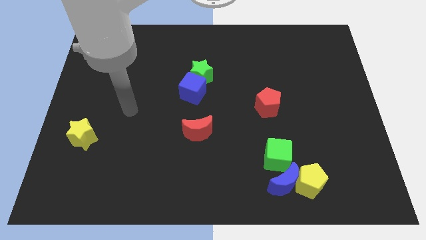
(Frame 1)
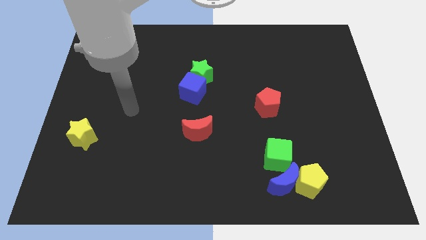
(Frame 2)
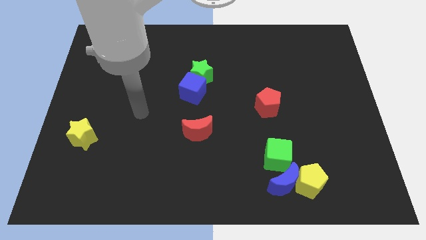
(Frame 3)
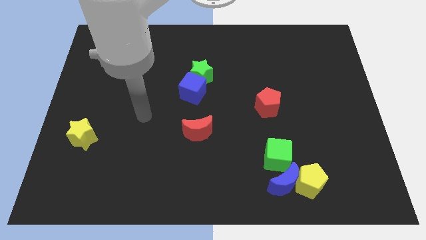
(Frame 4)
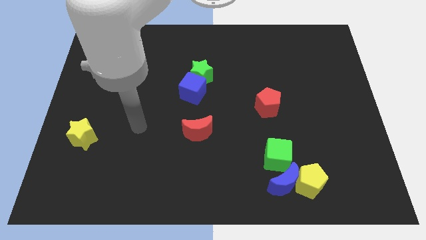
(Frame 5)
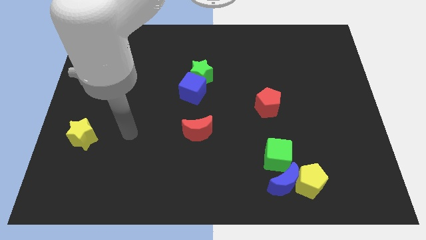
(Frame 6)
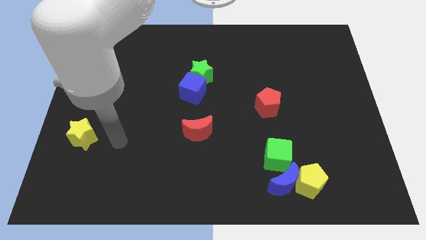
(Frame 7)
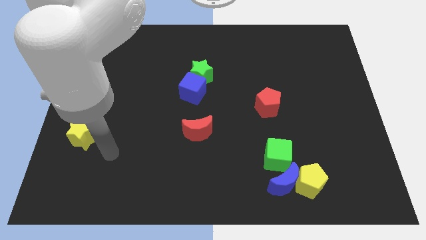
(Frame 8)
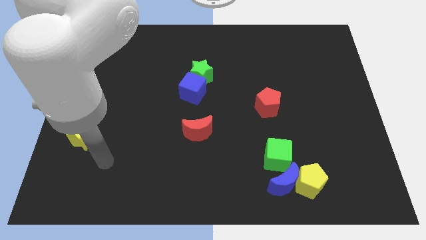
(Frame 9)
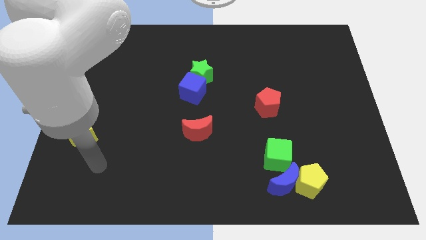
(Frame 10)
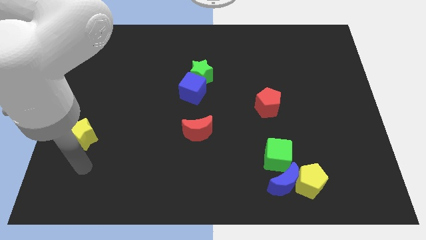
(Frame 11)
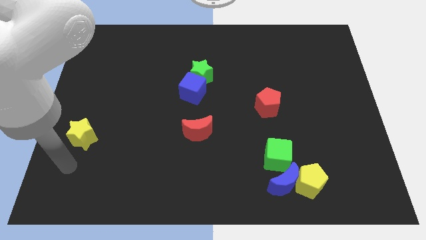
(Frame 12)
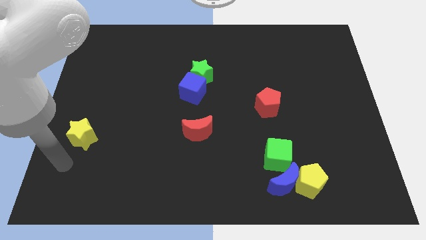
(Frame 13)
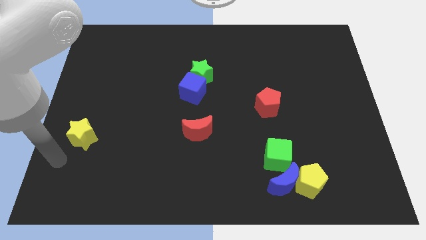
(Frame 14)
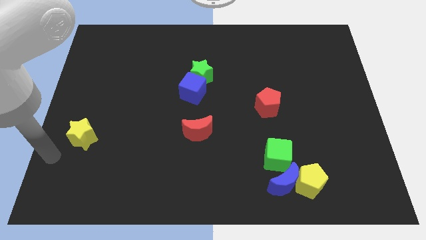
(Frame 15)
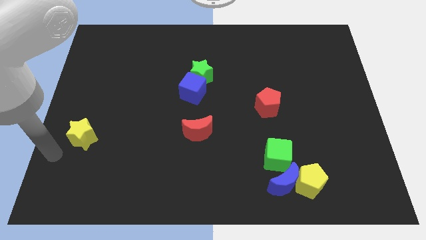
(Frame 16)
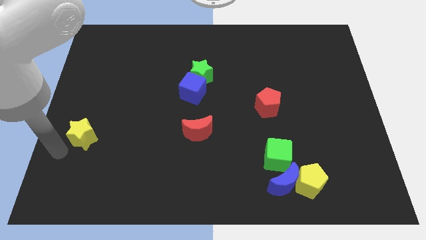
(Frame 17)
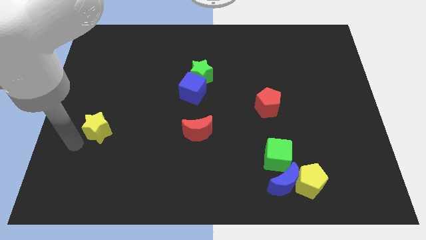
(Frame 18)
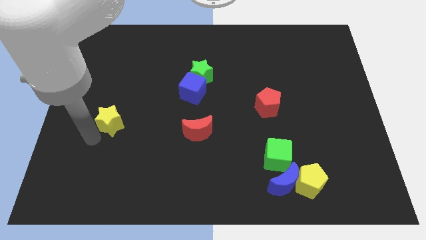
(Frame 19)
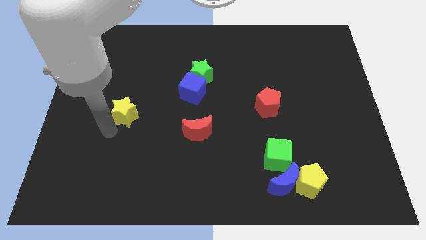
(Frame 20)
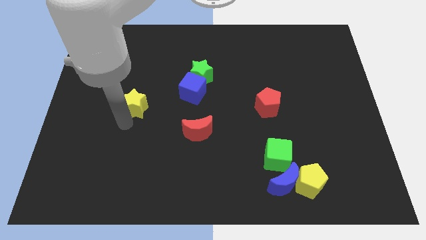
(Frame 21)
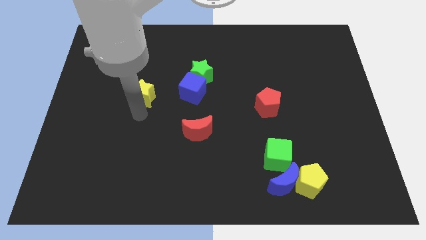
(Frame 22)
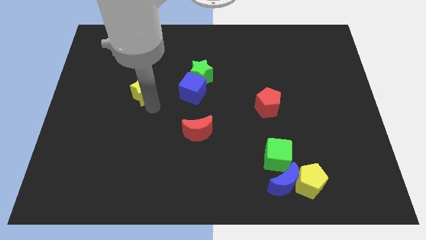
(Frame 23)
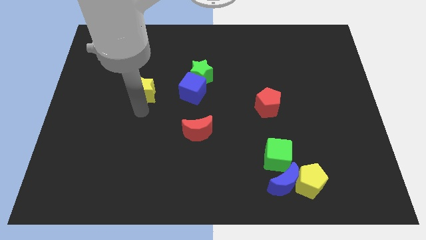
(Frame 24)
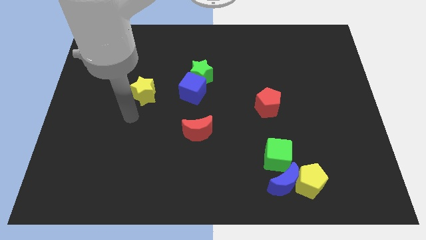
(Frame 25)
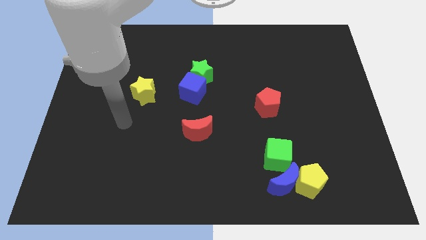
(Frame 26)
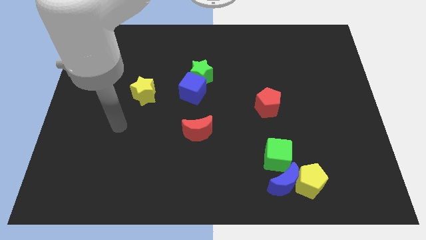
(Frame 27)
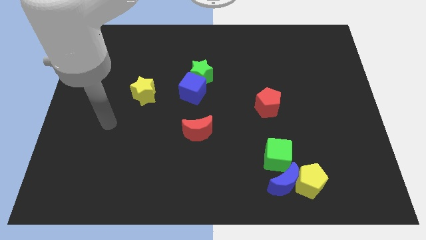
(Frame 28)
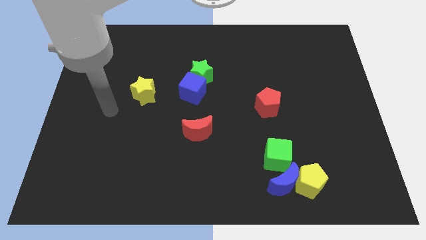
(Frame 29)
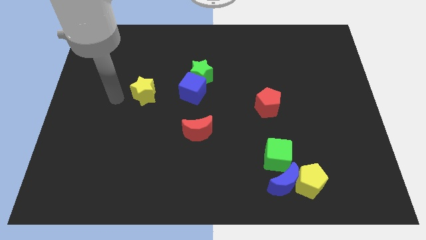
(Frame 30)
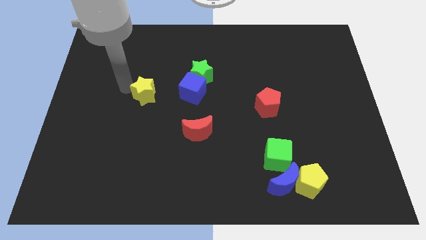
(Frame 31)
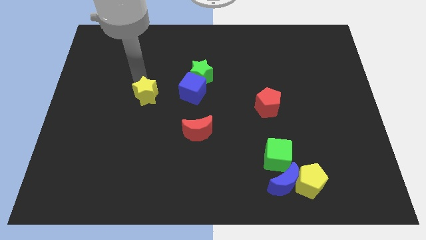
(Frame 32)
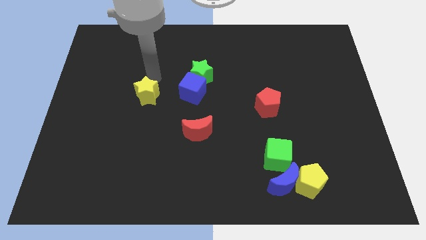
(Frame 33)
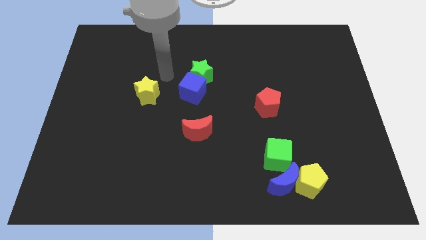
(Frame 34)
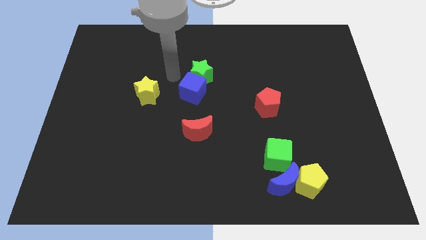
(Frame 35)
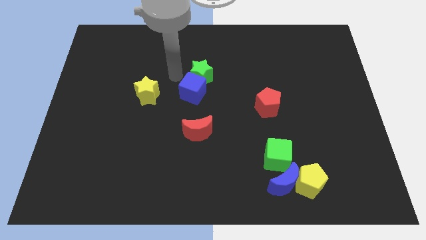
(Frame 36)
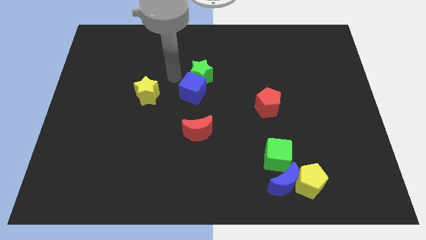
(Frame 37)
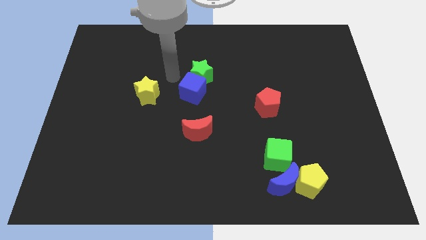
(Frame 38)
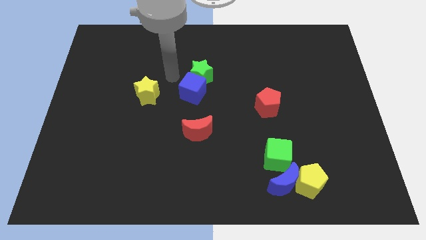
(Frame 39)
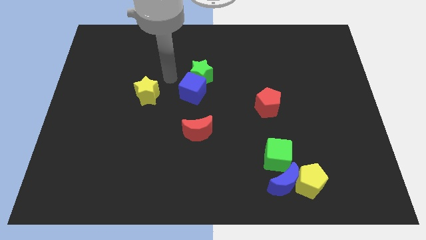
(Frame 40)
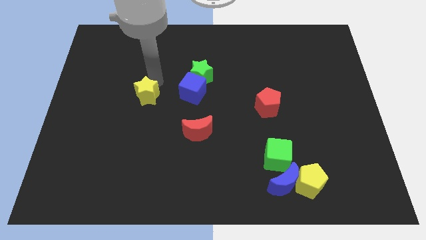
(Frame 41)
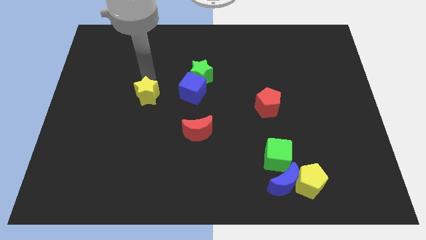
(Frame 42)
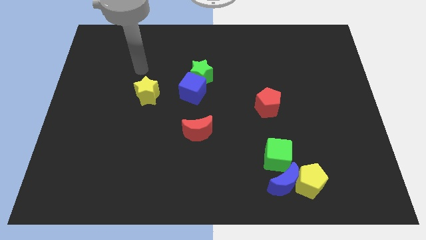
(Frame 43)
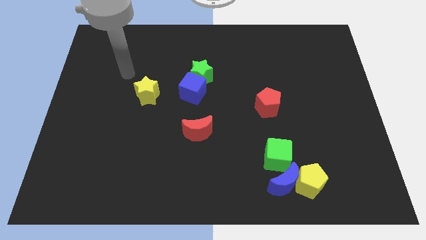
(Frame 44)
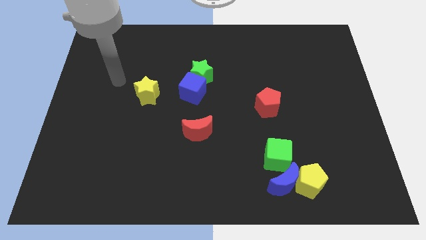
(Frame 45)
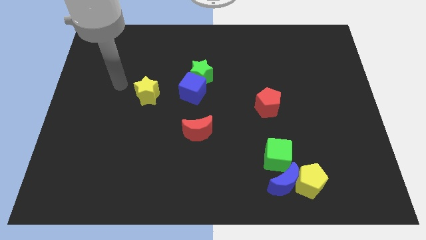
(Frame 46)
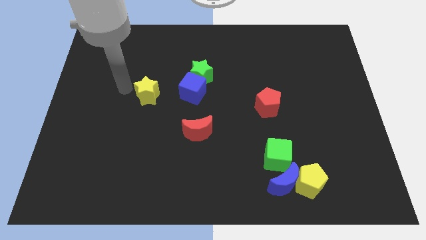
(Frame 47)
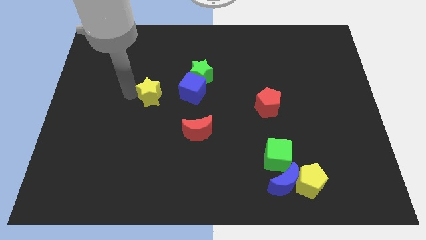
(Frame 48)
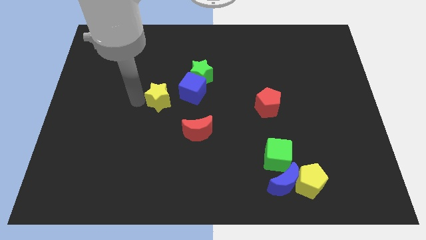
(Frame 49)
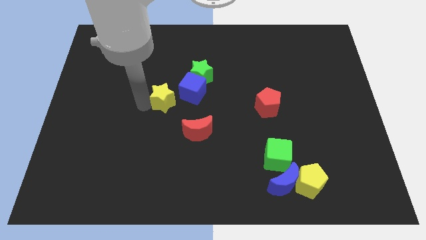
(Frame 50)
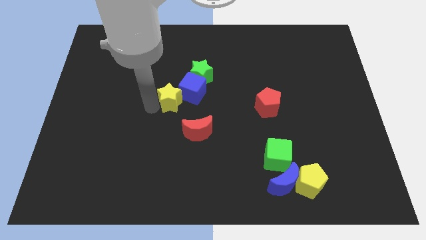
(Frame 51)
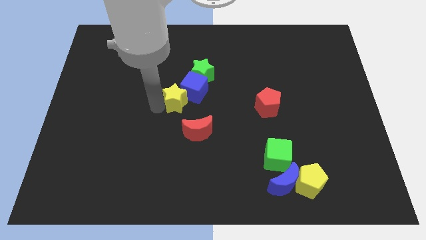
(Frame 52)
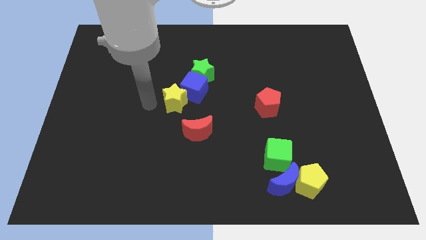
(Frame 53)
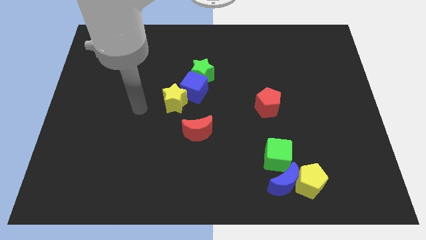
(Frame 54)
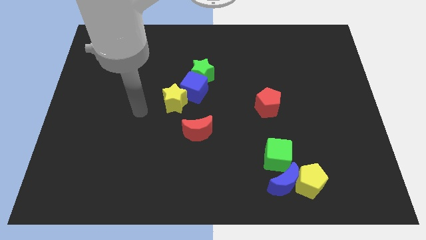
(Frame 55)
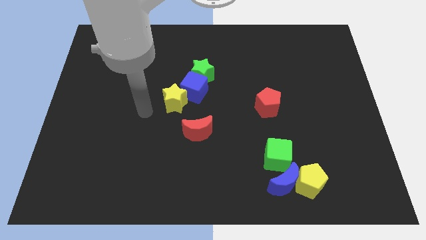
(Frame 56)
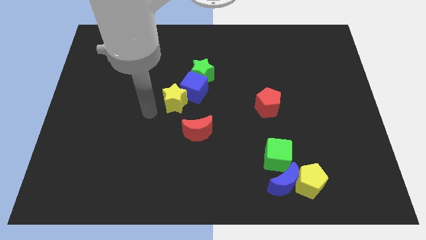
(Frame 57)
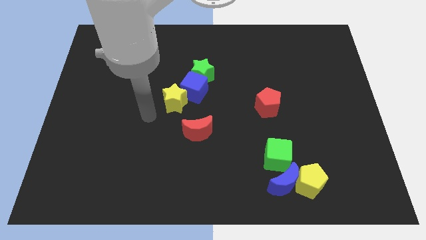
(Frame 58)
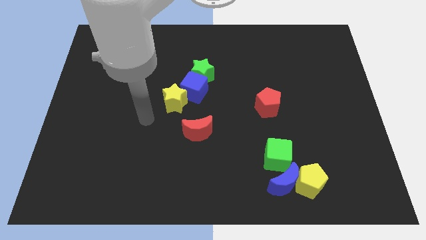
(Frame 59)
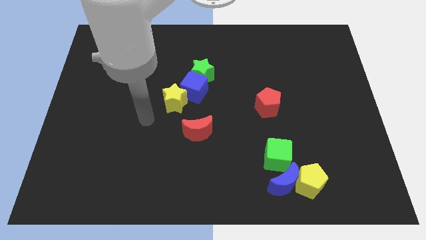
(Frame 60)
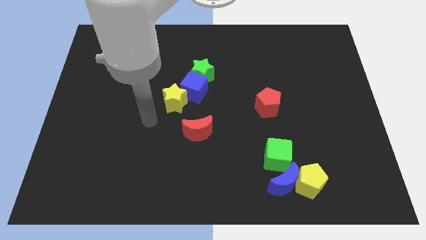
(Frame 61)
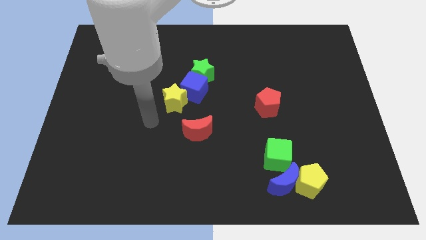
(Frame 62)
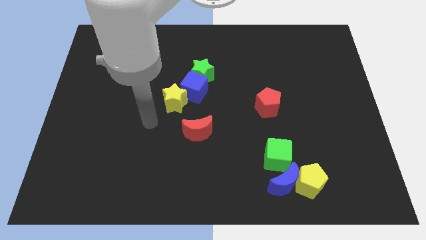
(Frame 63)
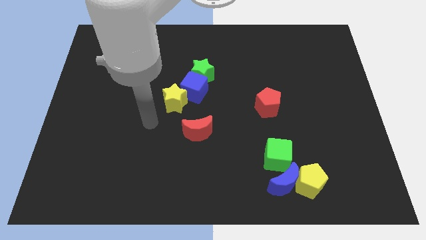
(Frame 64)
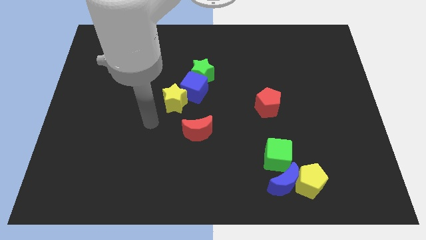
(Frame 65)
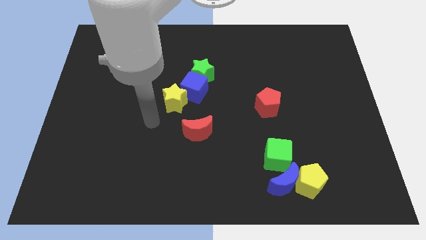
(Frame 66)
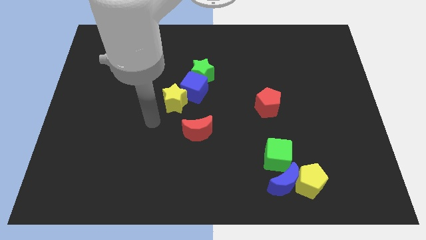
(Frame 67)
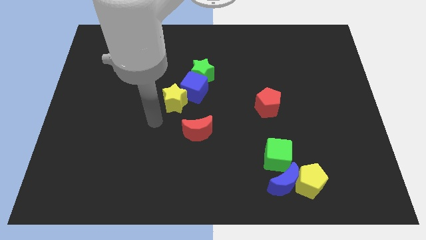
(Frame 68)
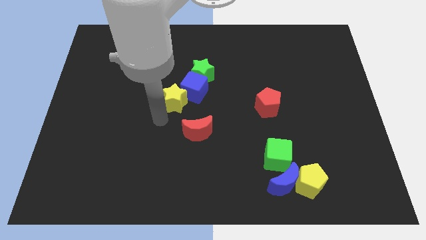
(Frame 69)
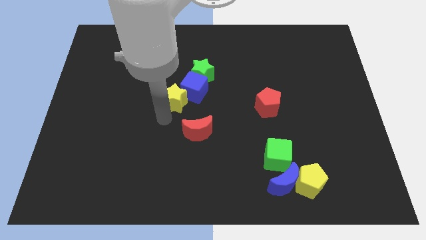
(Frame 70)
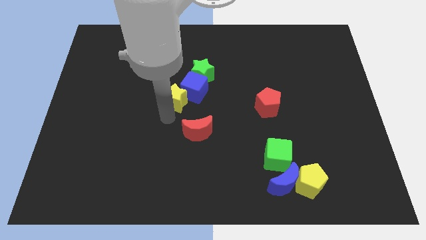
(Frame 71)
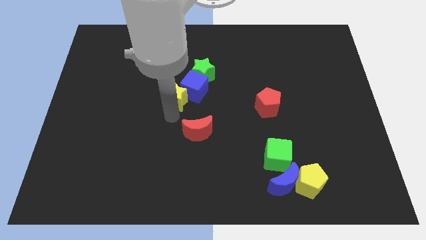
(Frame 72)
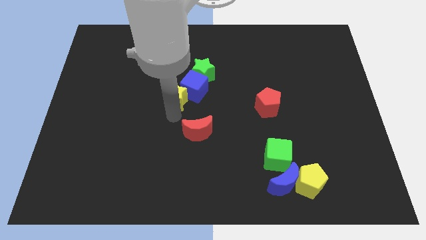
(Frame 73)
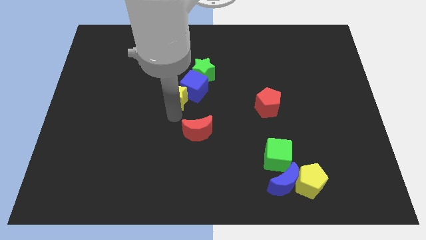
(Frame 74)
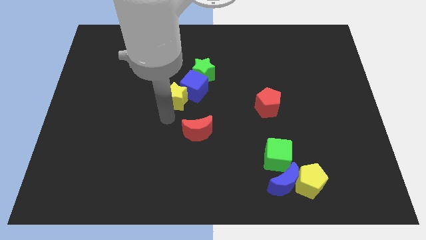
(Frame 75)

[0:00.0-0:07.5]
push the yellow star into the blue cube

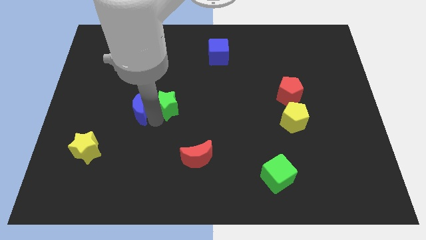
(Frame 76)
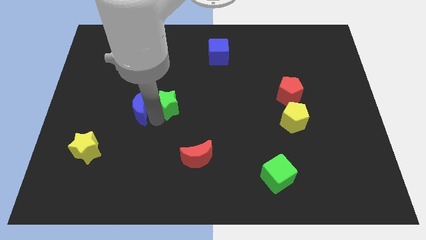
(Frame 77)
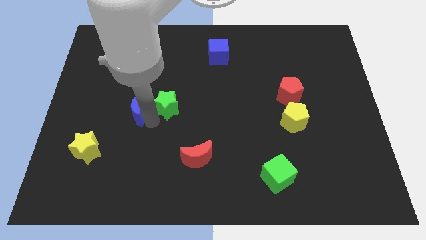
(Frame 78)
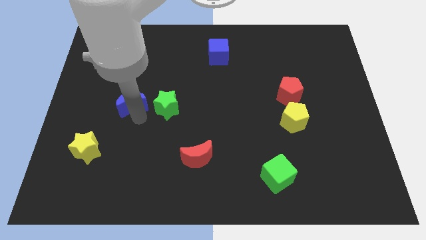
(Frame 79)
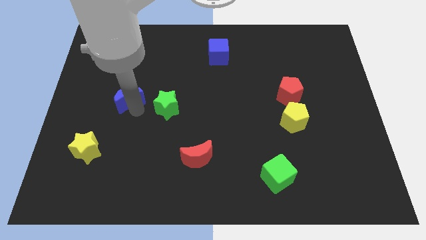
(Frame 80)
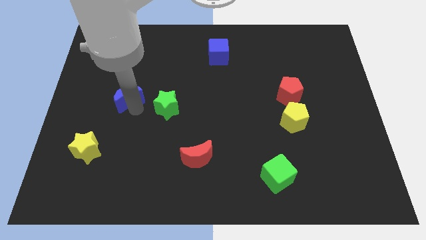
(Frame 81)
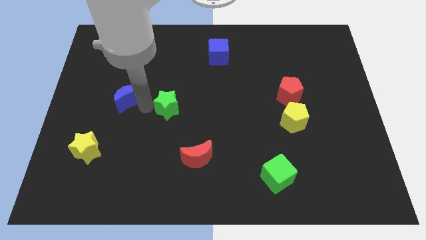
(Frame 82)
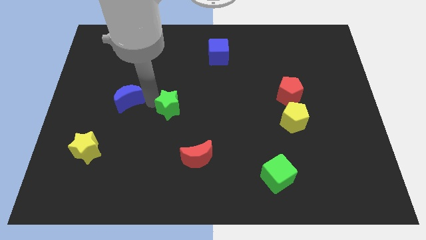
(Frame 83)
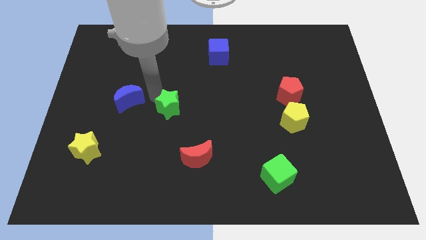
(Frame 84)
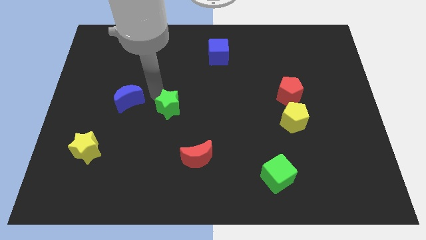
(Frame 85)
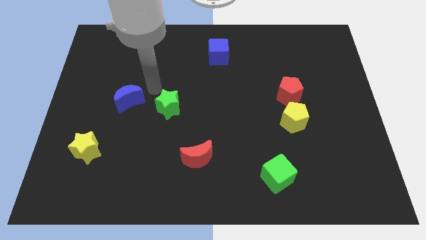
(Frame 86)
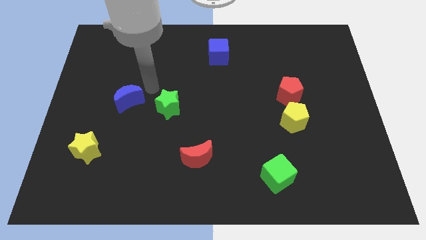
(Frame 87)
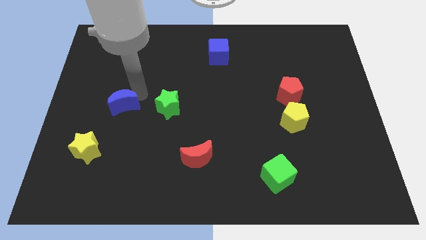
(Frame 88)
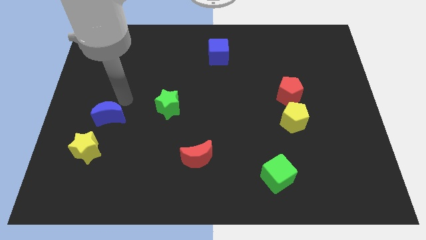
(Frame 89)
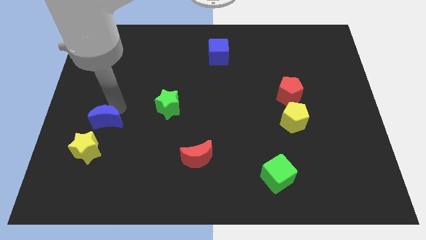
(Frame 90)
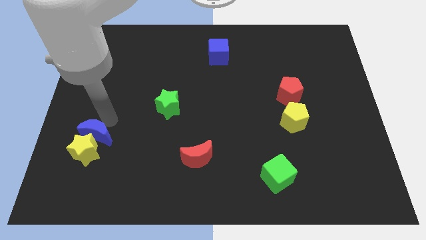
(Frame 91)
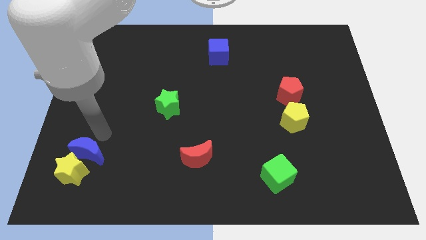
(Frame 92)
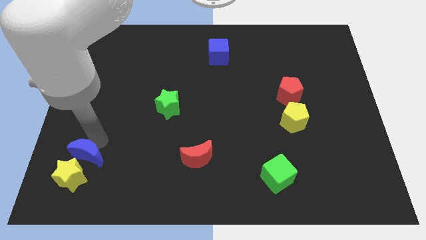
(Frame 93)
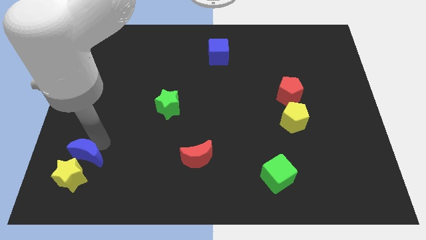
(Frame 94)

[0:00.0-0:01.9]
move the blue crescent along with yellow star to the bottom left of the board
